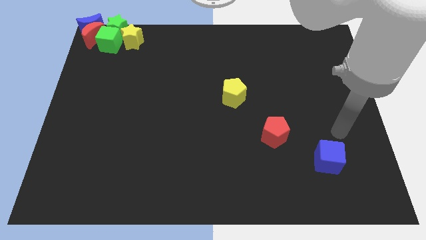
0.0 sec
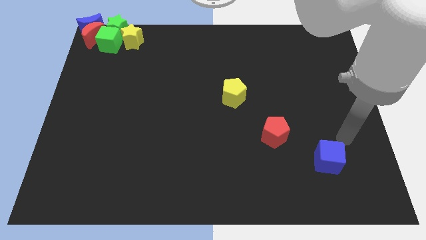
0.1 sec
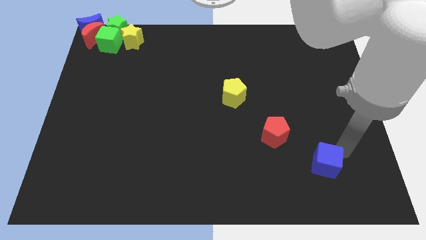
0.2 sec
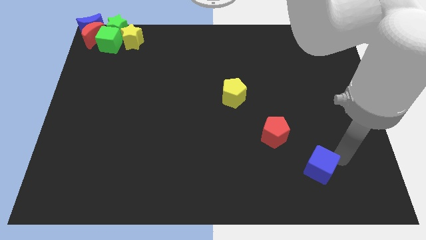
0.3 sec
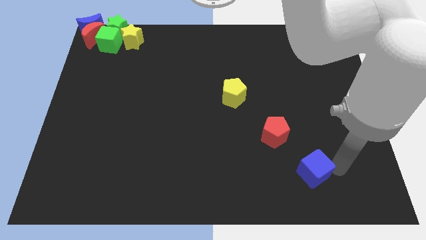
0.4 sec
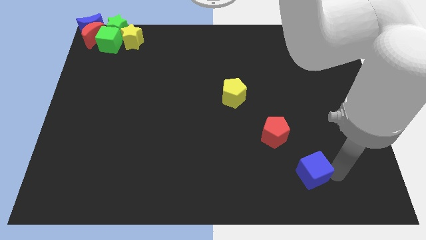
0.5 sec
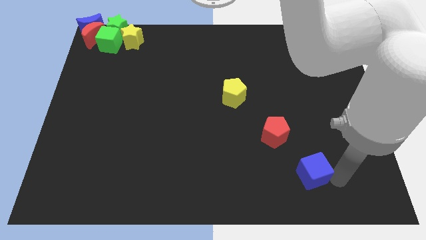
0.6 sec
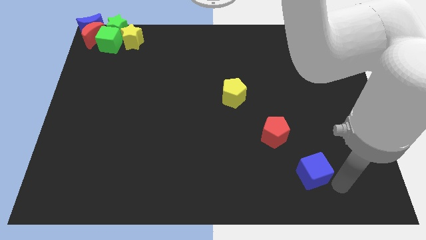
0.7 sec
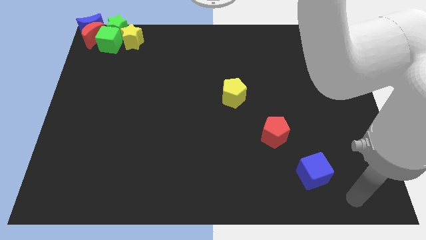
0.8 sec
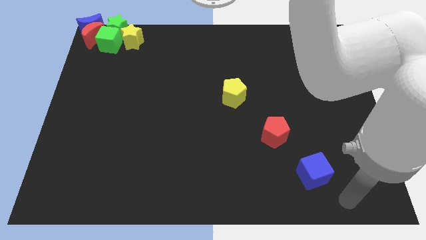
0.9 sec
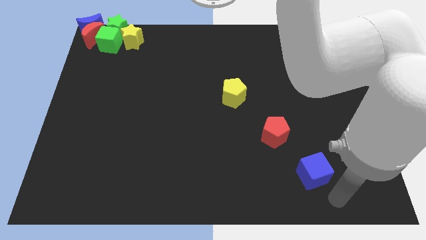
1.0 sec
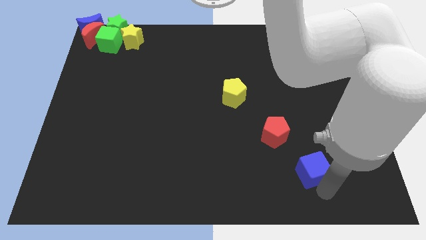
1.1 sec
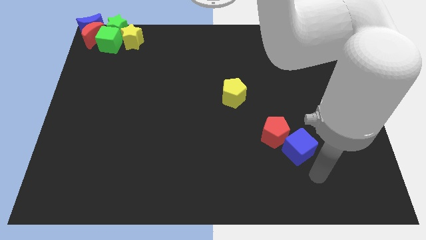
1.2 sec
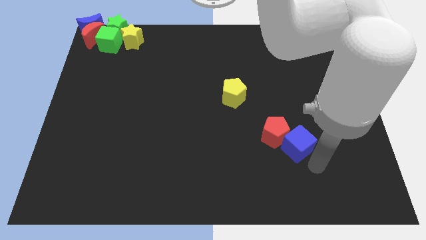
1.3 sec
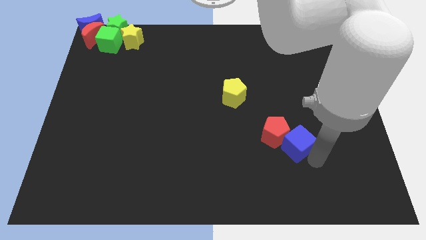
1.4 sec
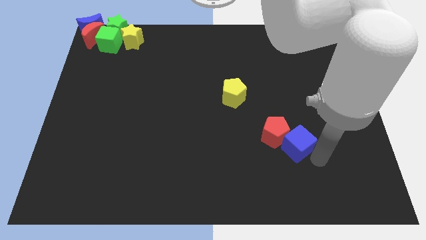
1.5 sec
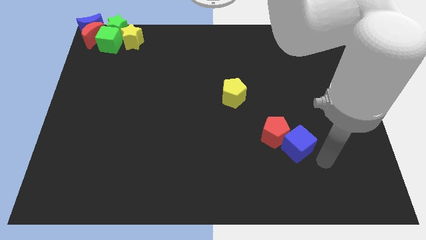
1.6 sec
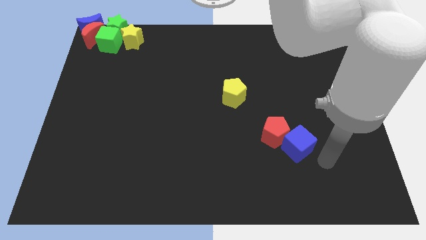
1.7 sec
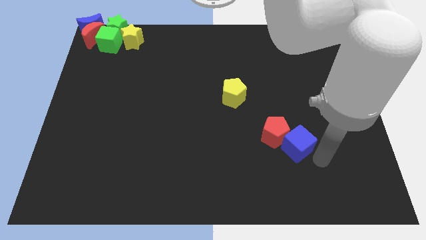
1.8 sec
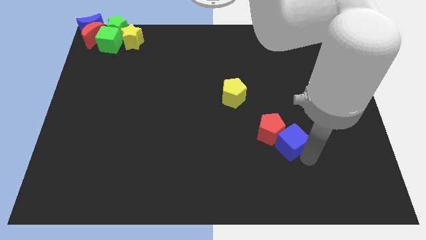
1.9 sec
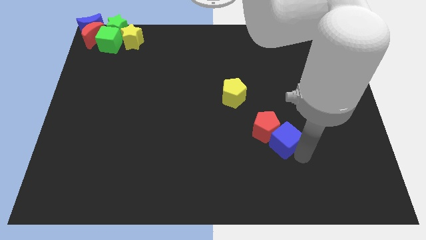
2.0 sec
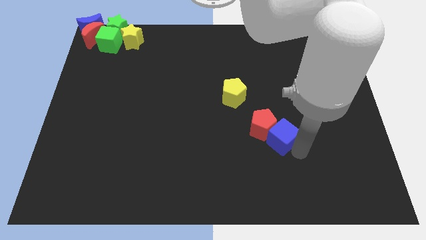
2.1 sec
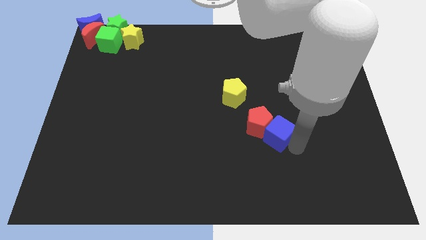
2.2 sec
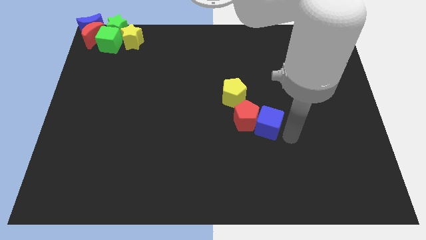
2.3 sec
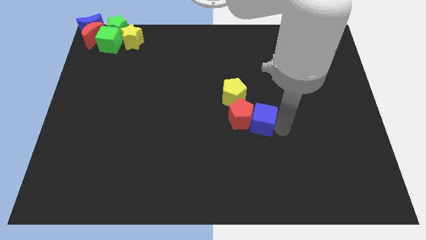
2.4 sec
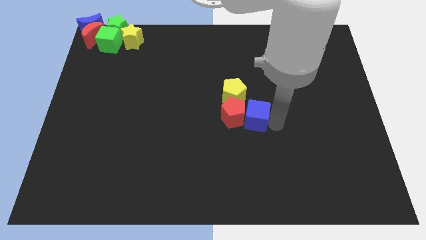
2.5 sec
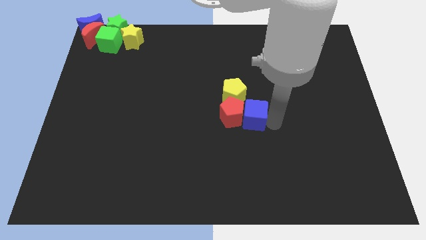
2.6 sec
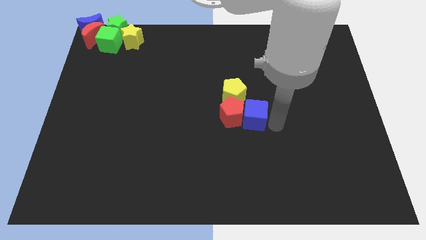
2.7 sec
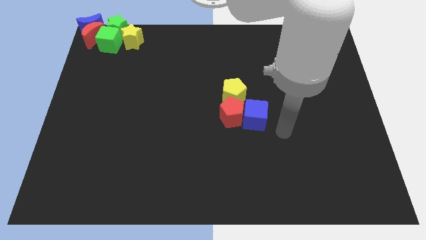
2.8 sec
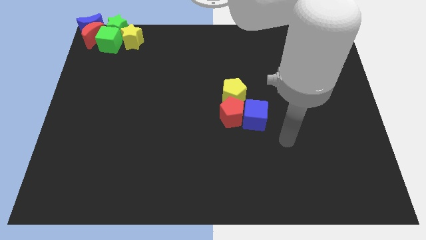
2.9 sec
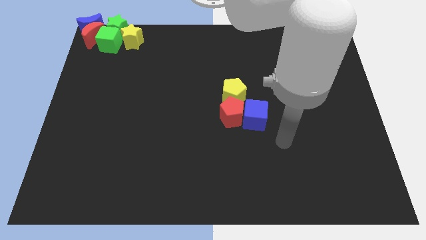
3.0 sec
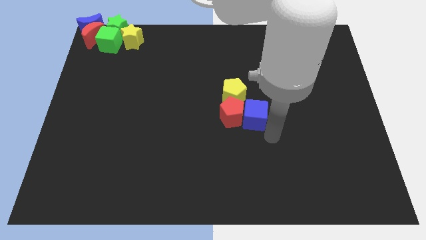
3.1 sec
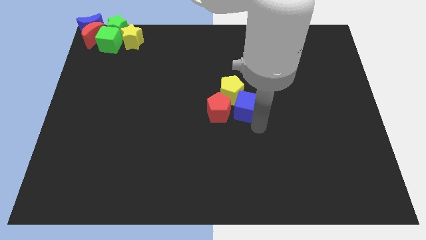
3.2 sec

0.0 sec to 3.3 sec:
bring the blue cube and red pentagon at the bottom side of the yellow pentagon

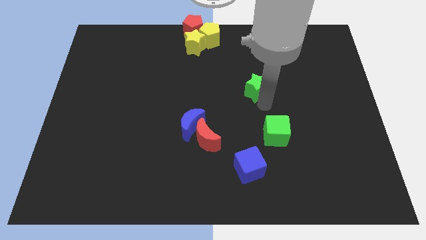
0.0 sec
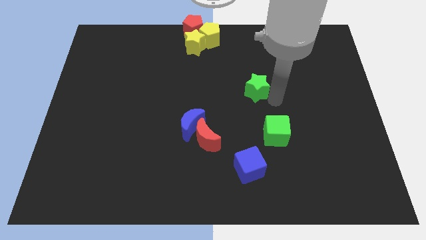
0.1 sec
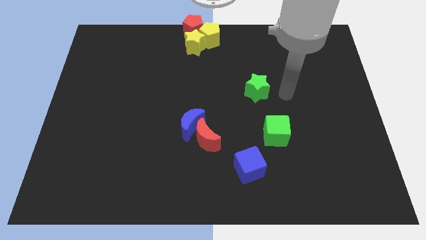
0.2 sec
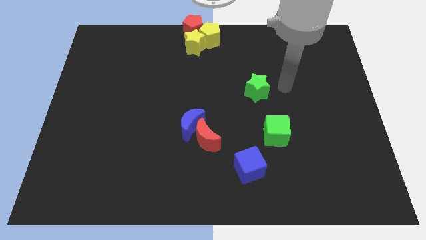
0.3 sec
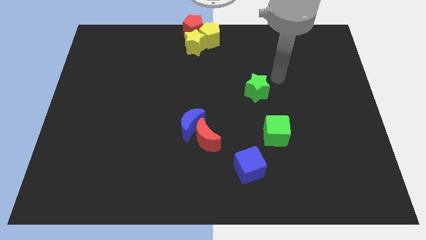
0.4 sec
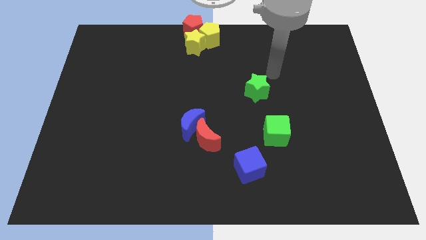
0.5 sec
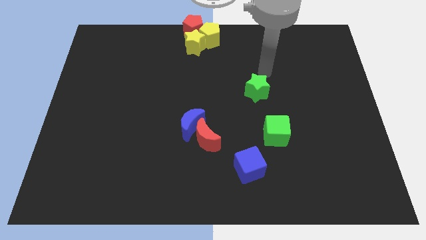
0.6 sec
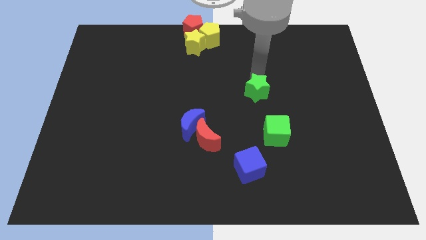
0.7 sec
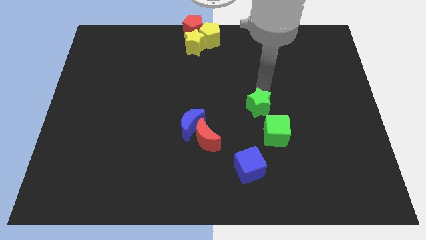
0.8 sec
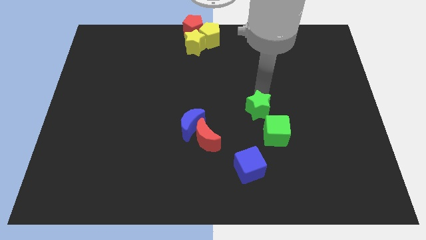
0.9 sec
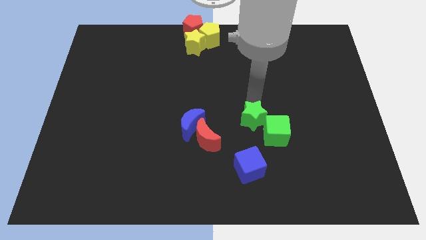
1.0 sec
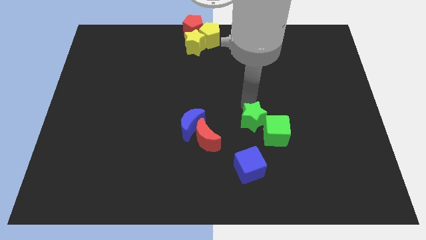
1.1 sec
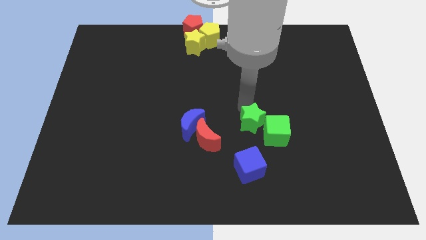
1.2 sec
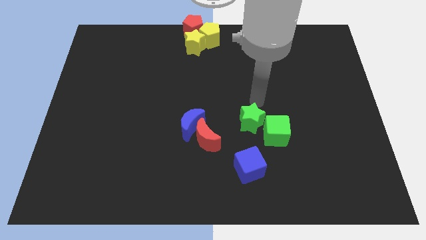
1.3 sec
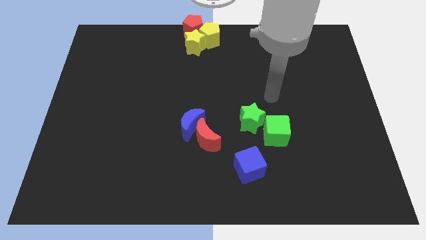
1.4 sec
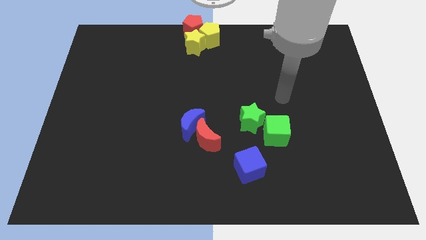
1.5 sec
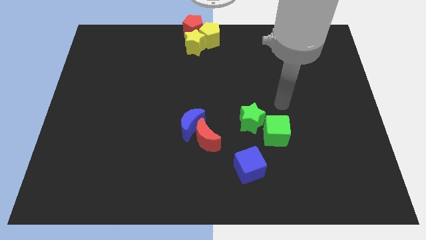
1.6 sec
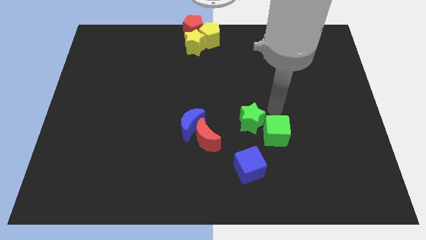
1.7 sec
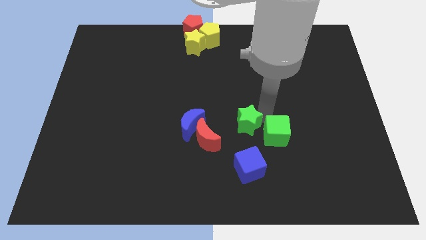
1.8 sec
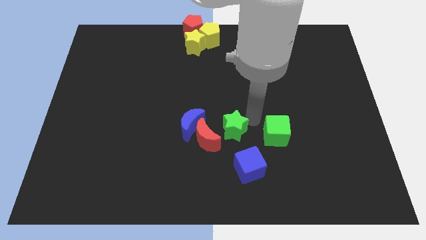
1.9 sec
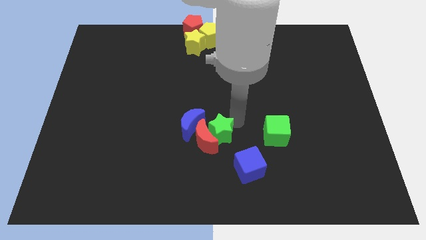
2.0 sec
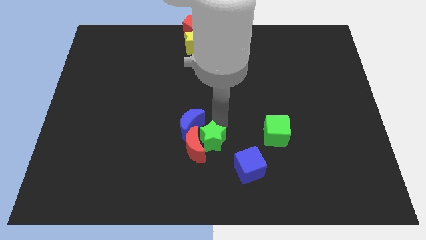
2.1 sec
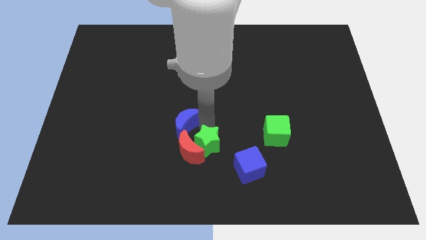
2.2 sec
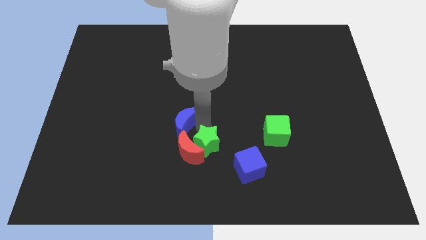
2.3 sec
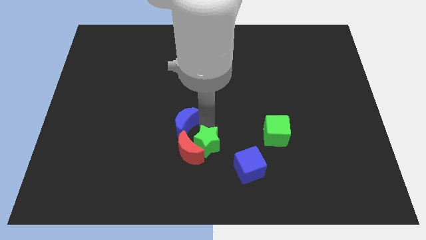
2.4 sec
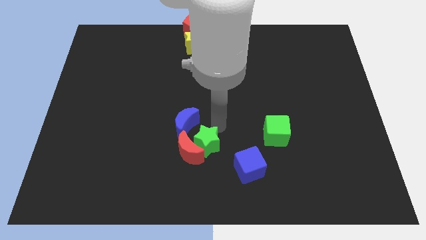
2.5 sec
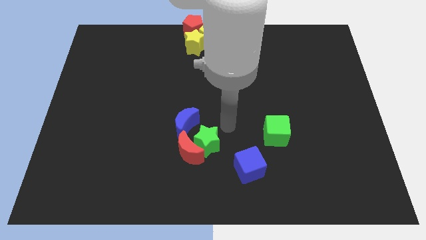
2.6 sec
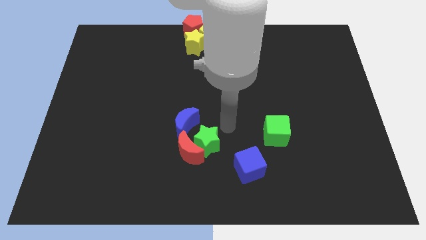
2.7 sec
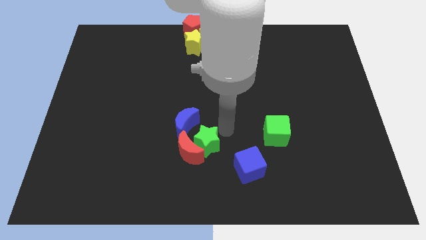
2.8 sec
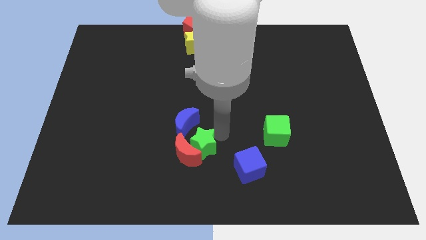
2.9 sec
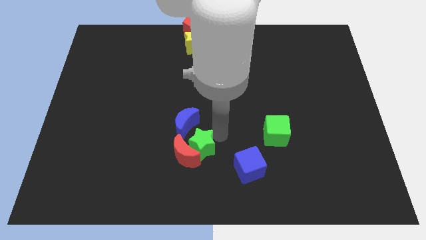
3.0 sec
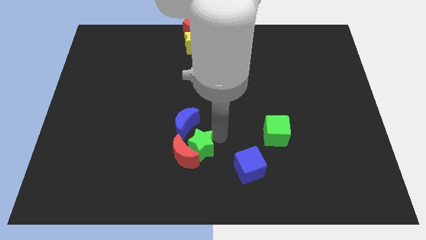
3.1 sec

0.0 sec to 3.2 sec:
move the green star into the red crescent

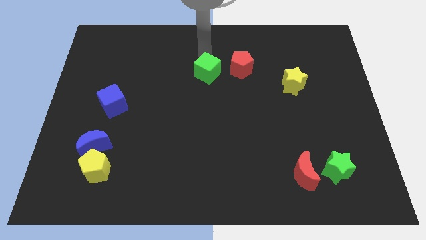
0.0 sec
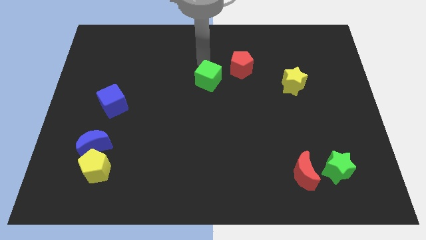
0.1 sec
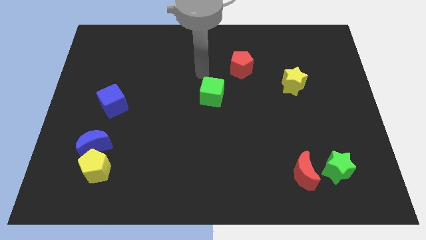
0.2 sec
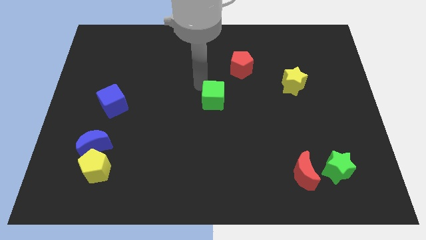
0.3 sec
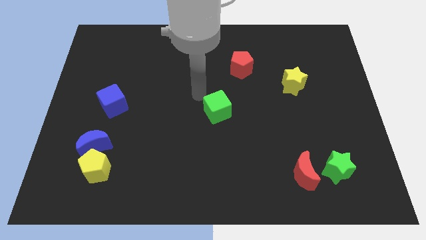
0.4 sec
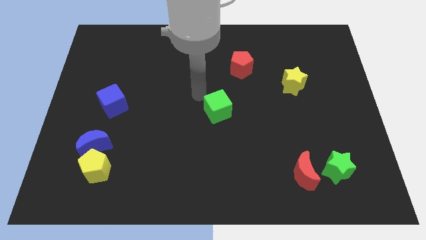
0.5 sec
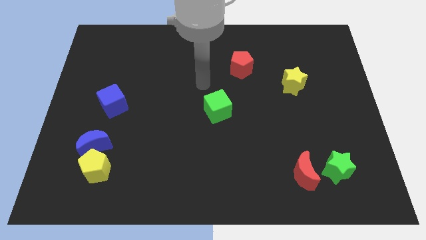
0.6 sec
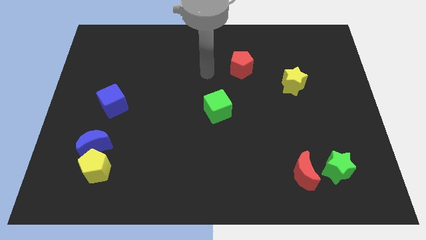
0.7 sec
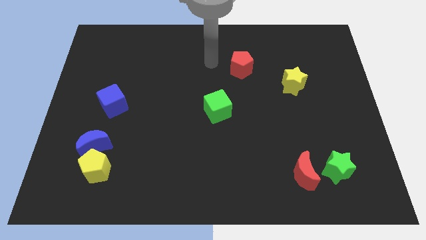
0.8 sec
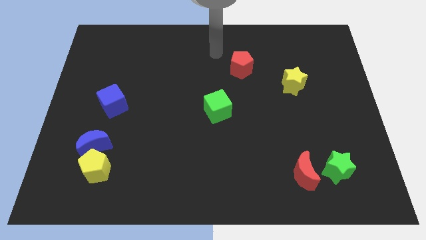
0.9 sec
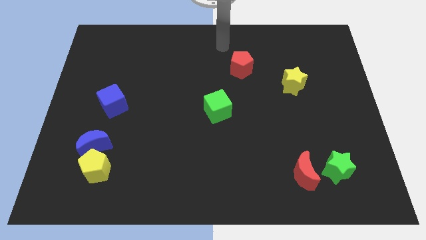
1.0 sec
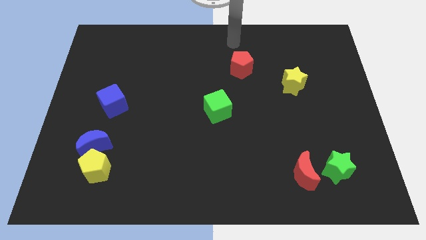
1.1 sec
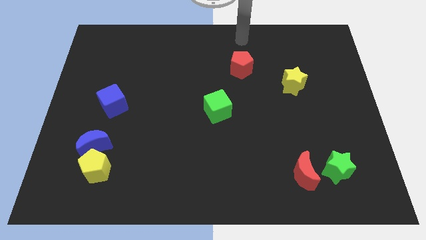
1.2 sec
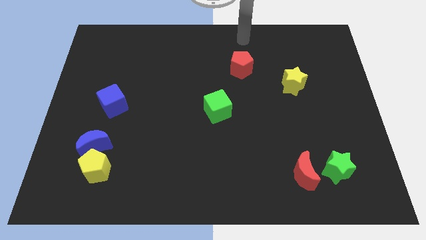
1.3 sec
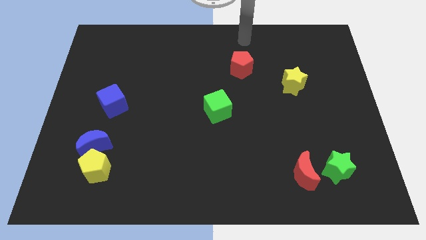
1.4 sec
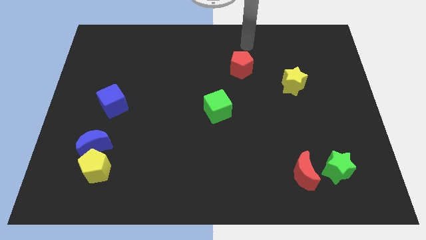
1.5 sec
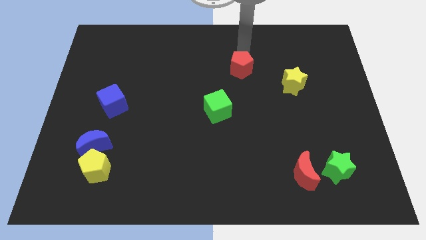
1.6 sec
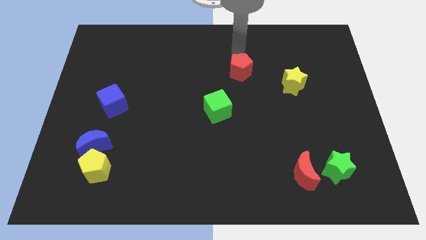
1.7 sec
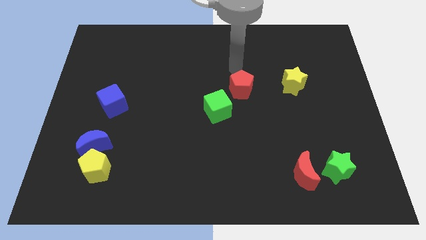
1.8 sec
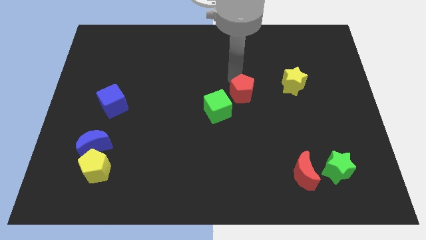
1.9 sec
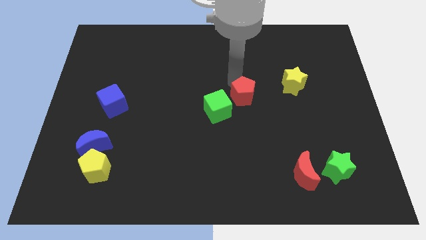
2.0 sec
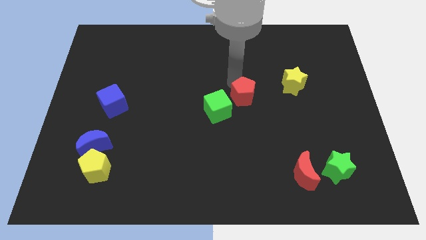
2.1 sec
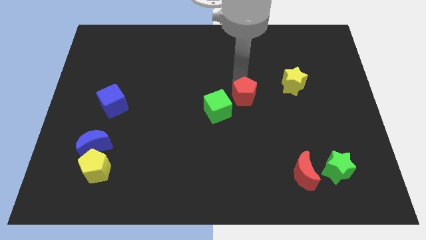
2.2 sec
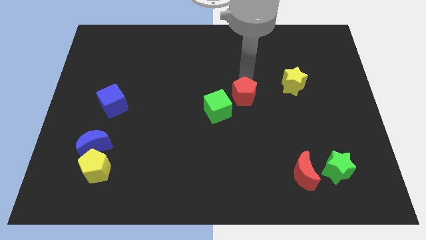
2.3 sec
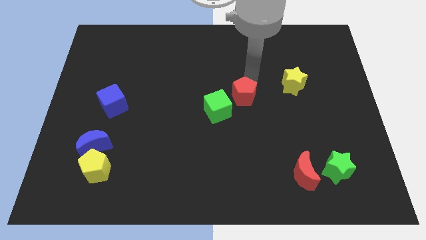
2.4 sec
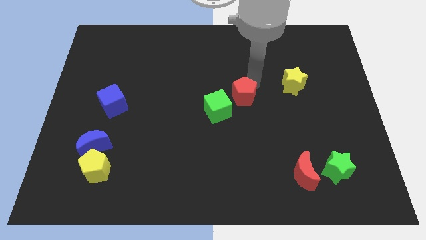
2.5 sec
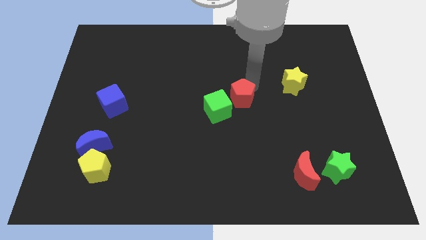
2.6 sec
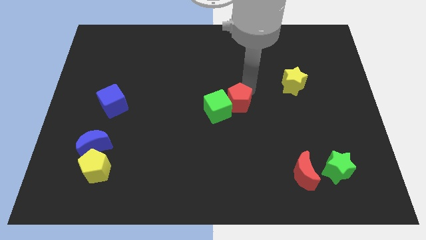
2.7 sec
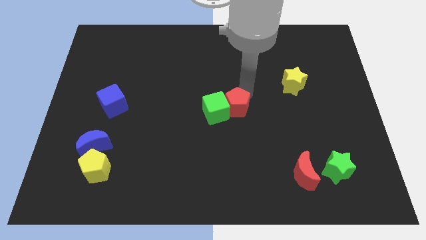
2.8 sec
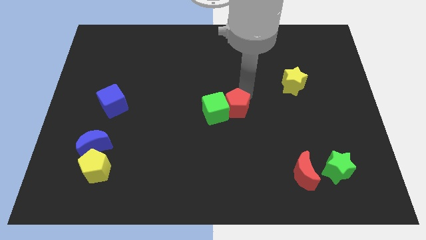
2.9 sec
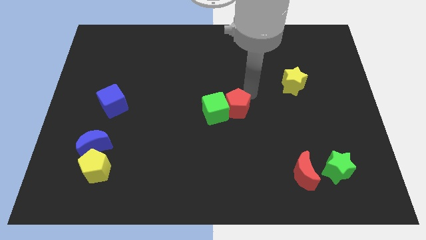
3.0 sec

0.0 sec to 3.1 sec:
push red pentagon to the right side of green cube
